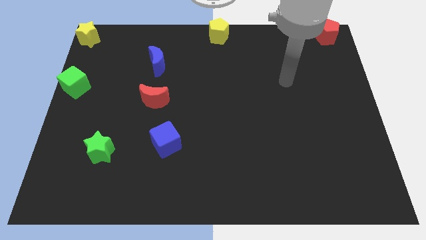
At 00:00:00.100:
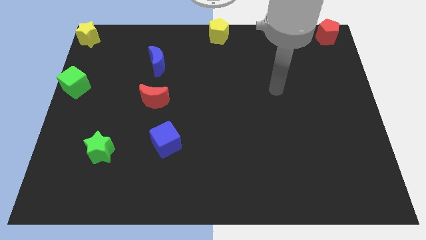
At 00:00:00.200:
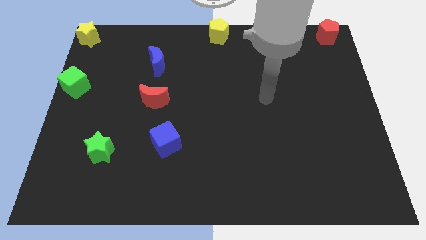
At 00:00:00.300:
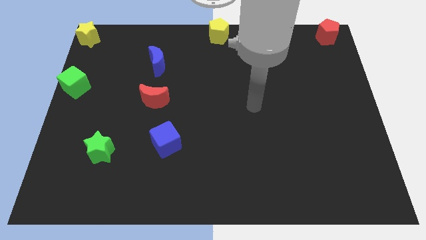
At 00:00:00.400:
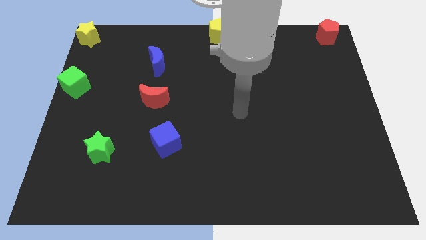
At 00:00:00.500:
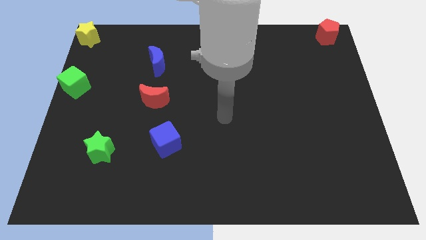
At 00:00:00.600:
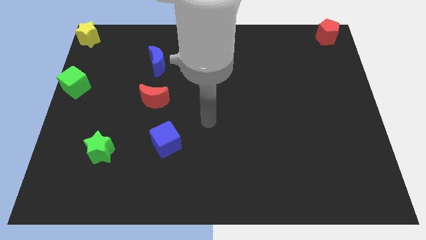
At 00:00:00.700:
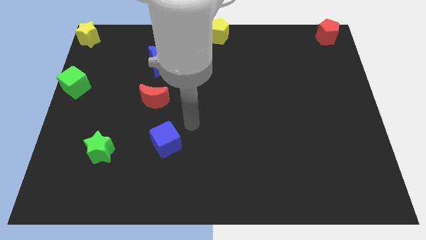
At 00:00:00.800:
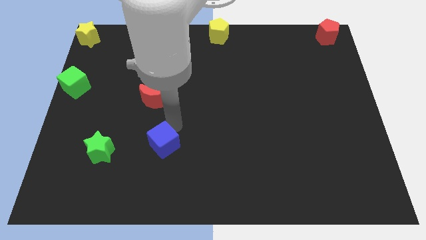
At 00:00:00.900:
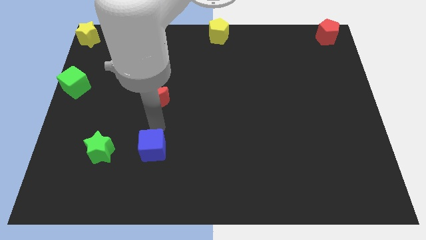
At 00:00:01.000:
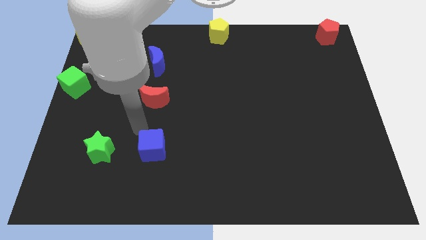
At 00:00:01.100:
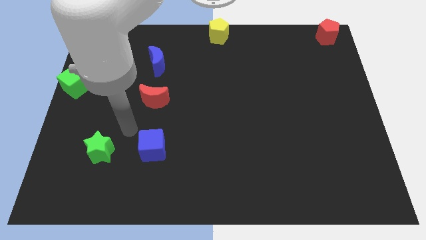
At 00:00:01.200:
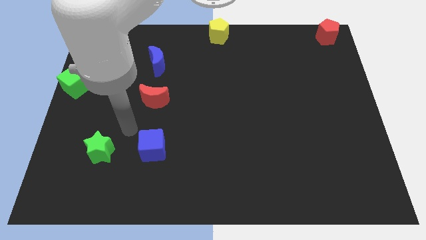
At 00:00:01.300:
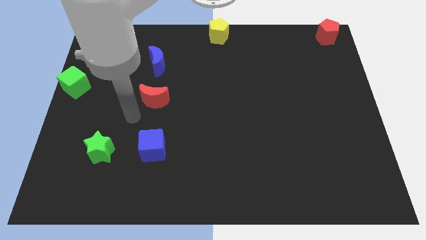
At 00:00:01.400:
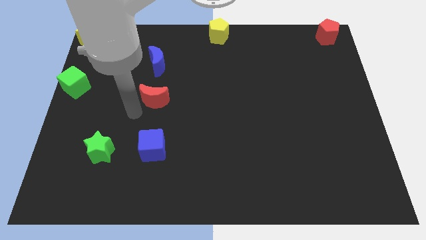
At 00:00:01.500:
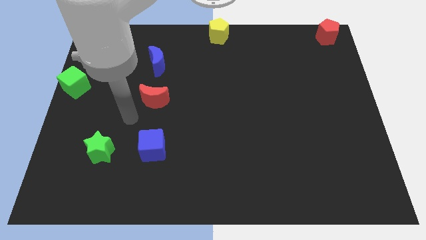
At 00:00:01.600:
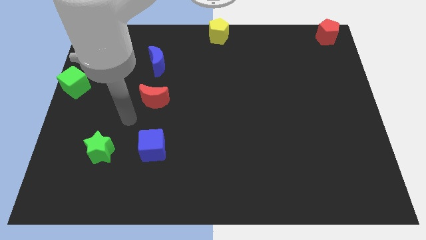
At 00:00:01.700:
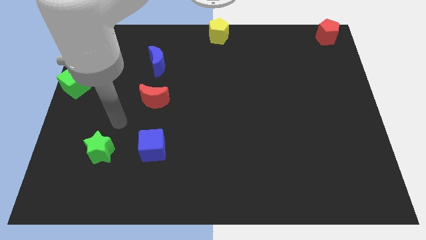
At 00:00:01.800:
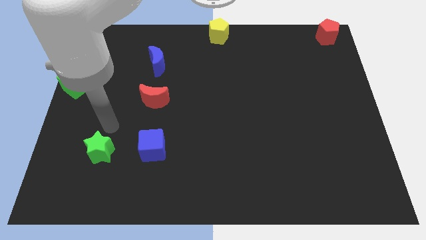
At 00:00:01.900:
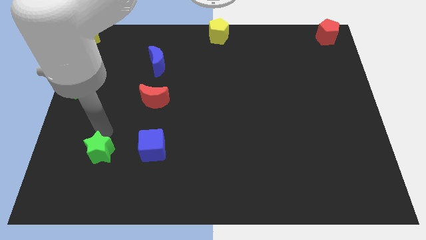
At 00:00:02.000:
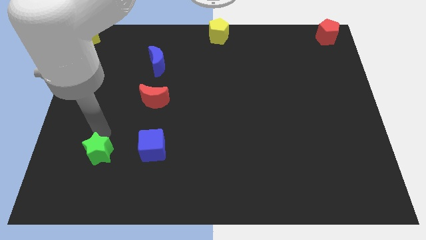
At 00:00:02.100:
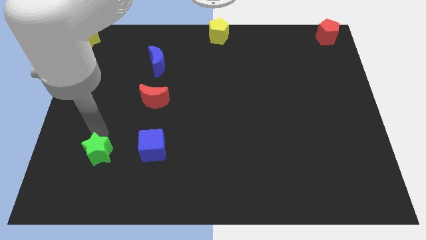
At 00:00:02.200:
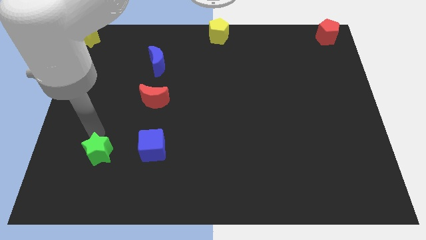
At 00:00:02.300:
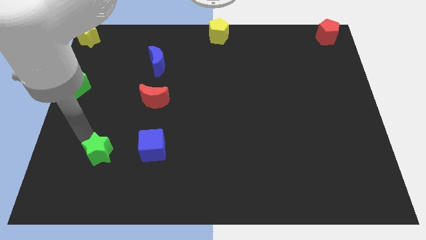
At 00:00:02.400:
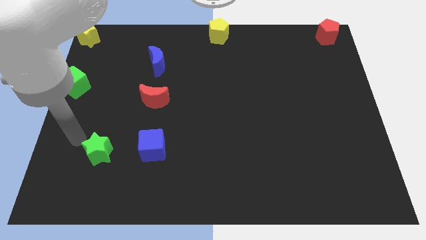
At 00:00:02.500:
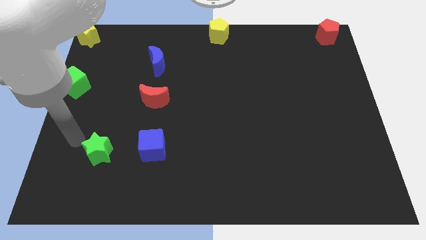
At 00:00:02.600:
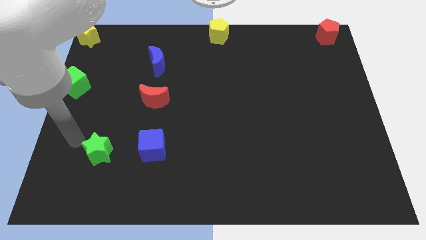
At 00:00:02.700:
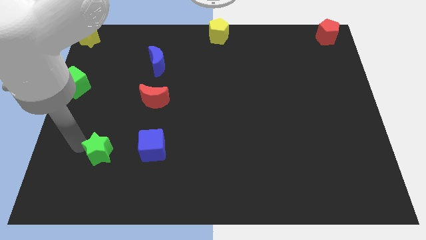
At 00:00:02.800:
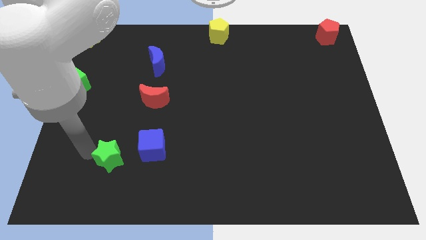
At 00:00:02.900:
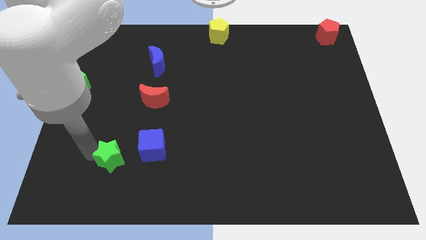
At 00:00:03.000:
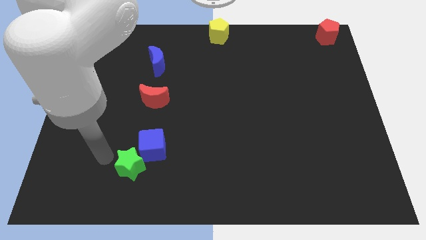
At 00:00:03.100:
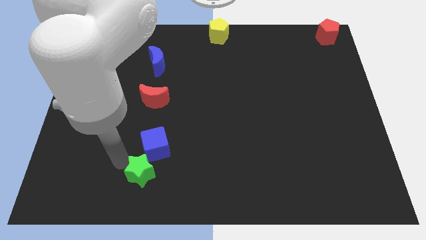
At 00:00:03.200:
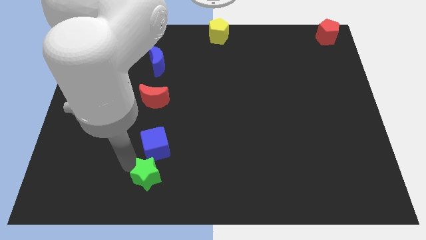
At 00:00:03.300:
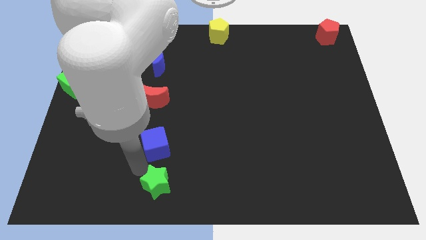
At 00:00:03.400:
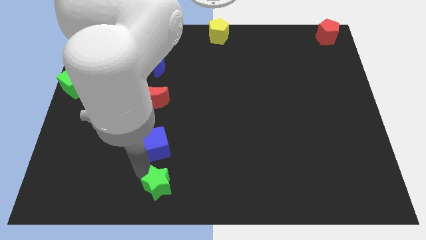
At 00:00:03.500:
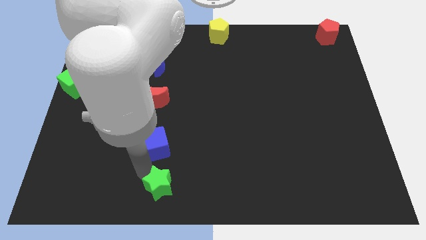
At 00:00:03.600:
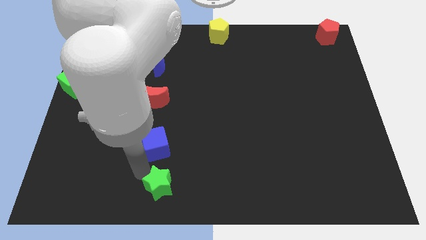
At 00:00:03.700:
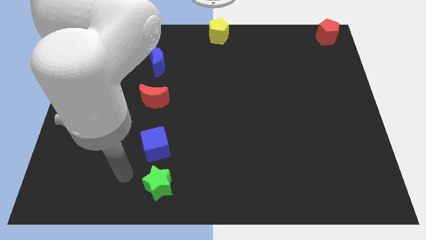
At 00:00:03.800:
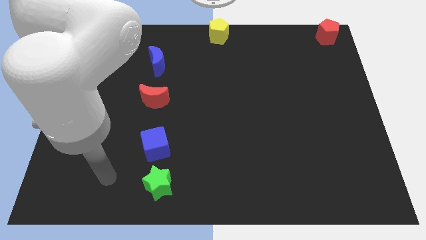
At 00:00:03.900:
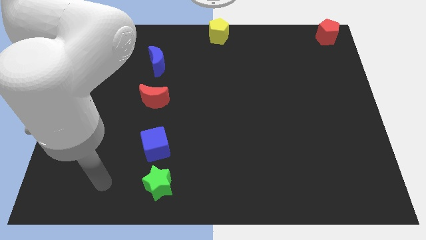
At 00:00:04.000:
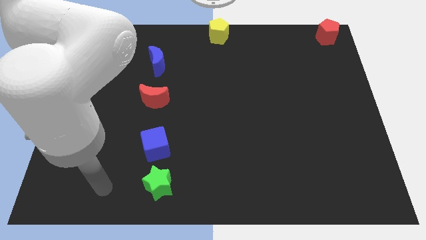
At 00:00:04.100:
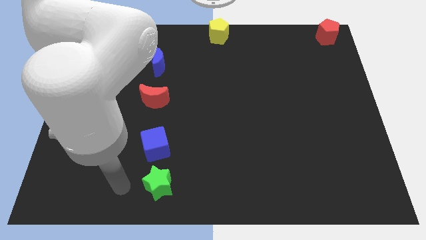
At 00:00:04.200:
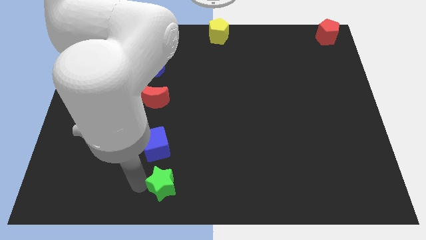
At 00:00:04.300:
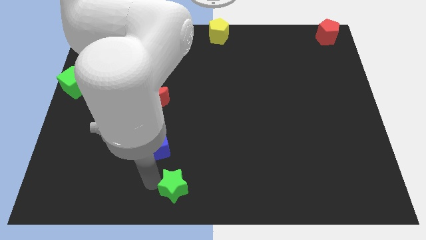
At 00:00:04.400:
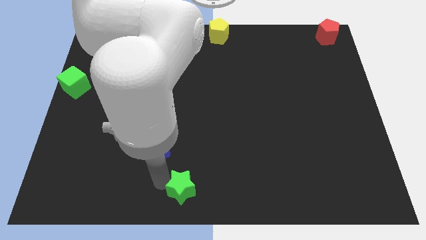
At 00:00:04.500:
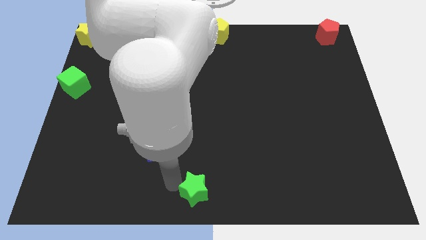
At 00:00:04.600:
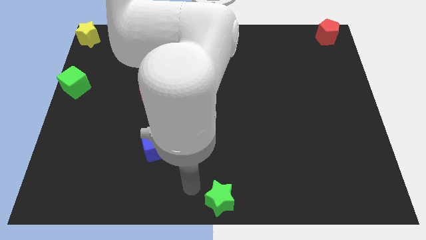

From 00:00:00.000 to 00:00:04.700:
place the green star at the bottom center of the board

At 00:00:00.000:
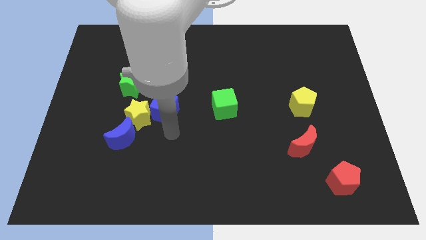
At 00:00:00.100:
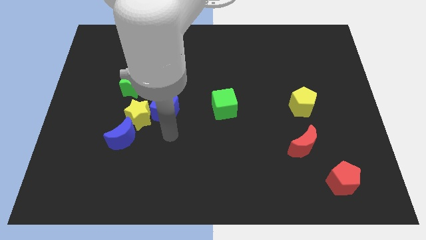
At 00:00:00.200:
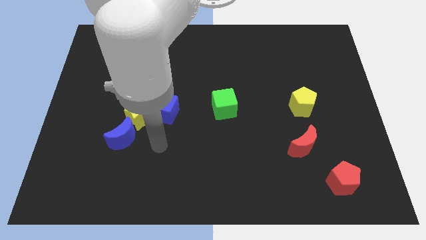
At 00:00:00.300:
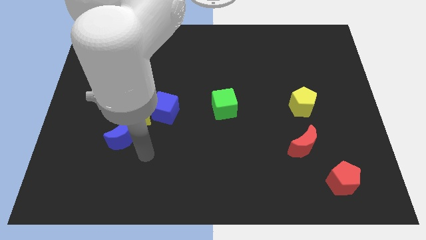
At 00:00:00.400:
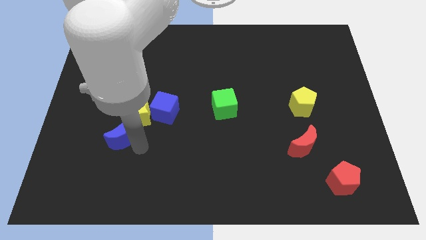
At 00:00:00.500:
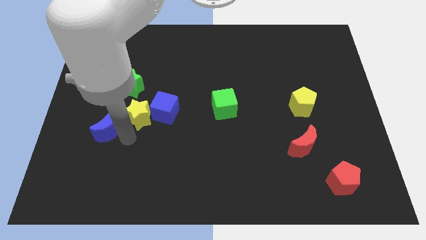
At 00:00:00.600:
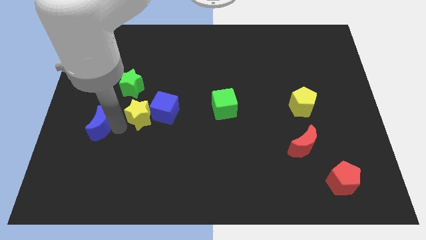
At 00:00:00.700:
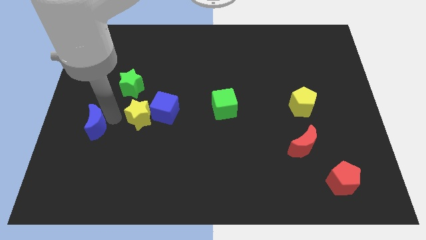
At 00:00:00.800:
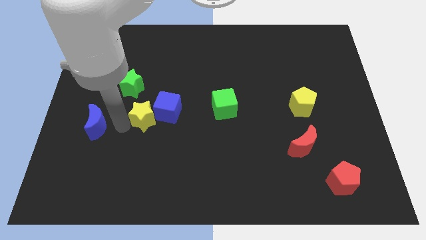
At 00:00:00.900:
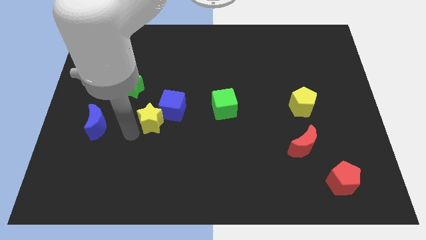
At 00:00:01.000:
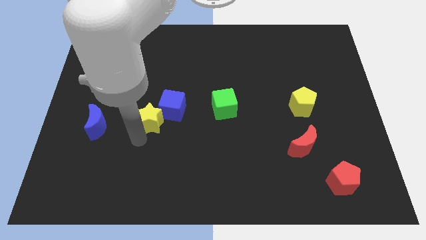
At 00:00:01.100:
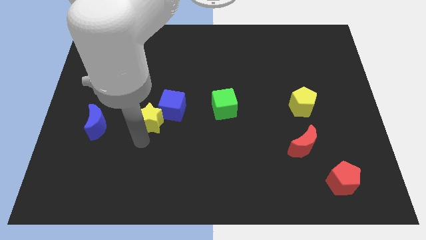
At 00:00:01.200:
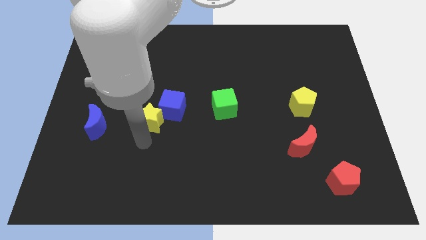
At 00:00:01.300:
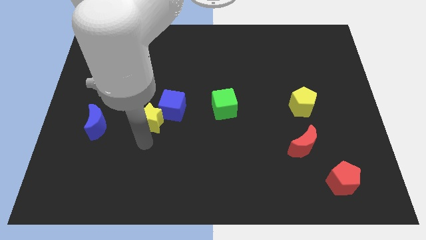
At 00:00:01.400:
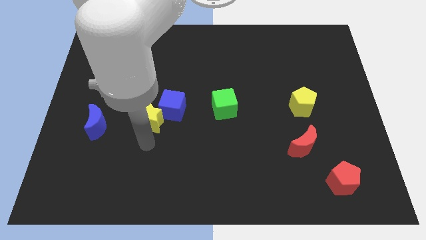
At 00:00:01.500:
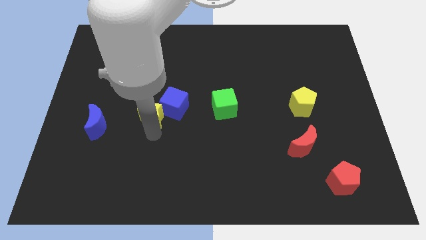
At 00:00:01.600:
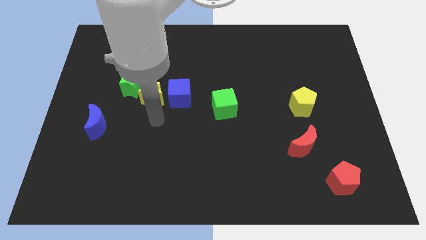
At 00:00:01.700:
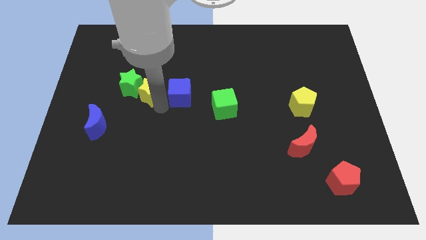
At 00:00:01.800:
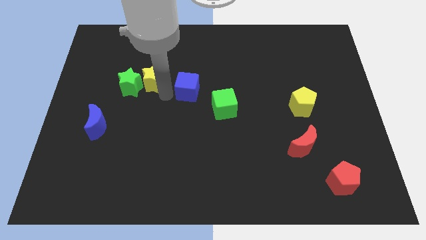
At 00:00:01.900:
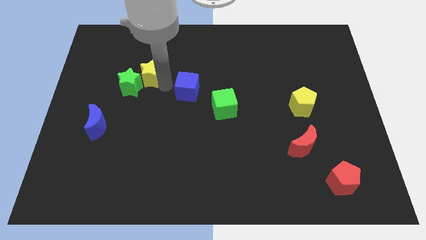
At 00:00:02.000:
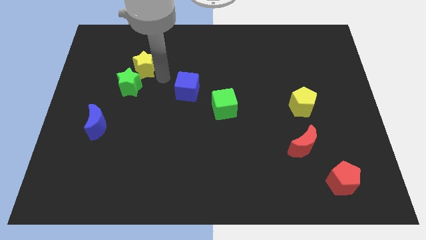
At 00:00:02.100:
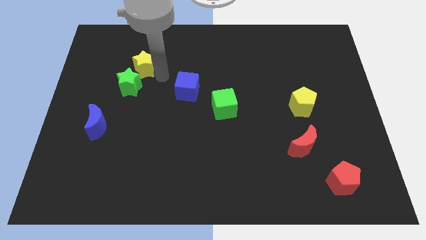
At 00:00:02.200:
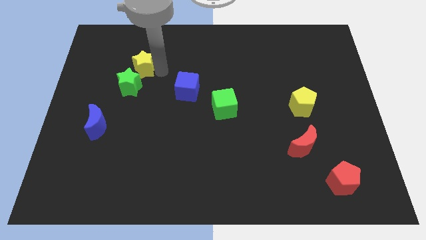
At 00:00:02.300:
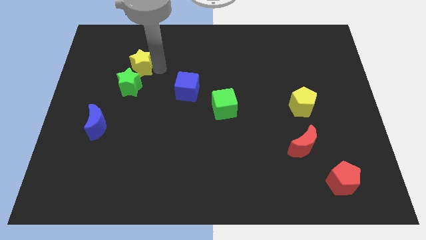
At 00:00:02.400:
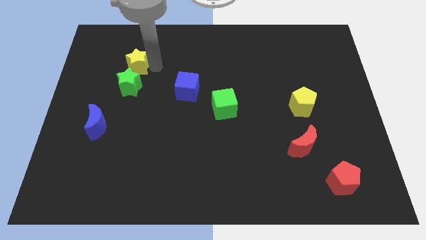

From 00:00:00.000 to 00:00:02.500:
move the yellow star above the green star

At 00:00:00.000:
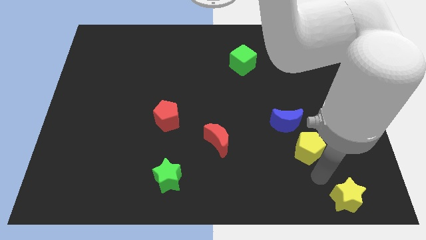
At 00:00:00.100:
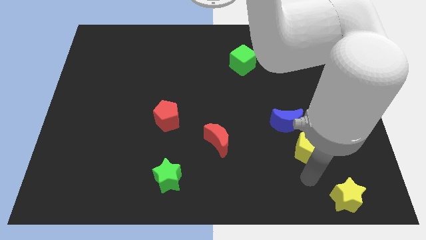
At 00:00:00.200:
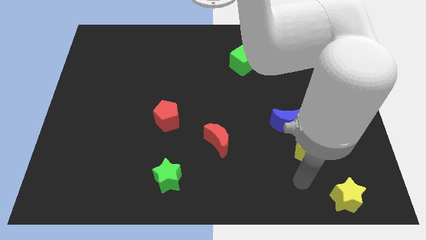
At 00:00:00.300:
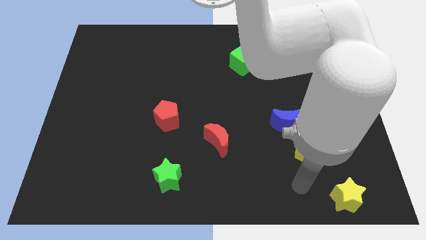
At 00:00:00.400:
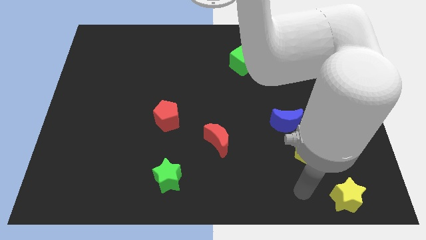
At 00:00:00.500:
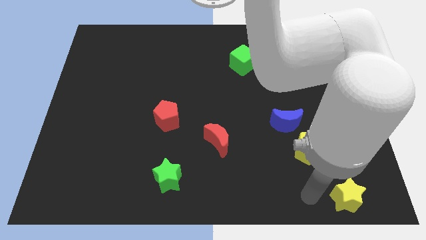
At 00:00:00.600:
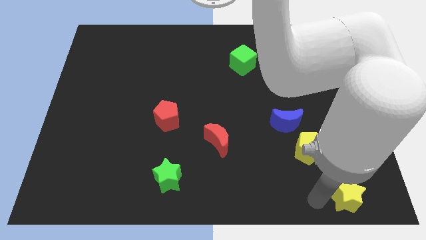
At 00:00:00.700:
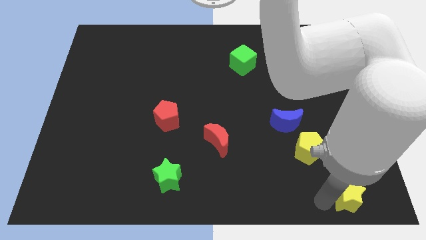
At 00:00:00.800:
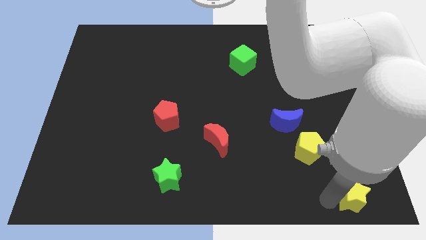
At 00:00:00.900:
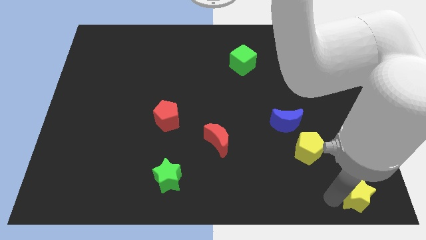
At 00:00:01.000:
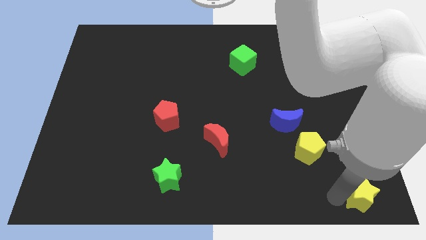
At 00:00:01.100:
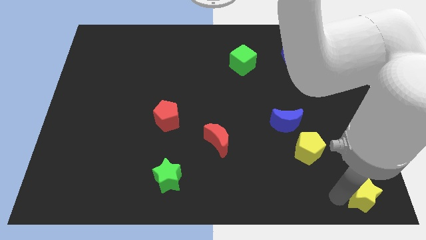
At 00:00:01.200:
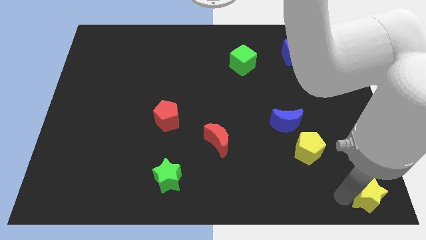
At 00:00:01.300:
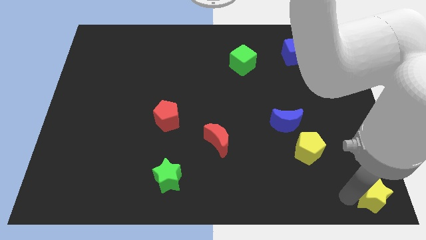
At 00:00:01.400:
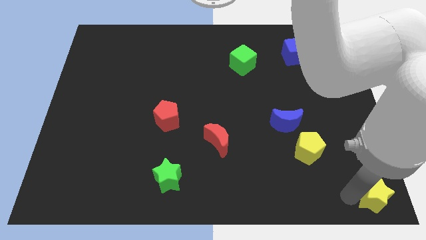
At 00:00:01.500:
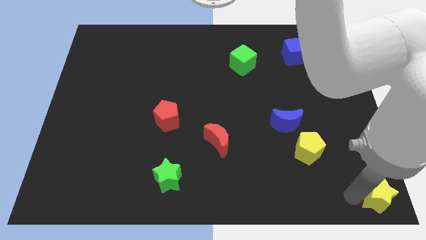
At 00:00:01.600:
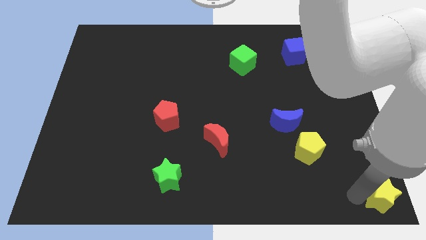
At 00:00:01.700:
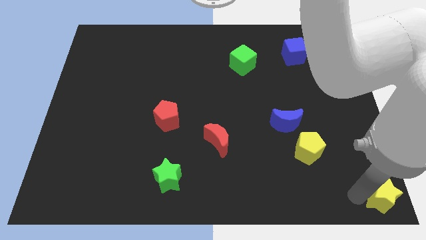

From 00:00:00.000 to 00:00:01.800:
put yellow star at the bottom right corner of the board
